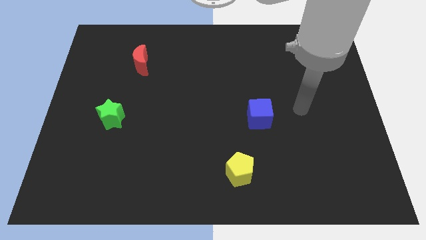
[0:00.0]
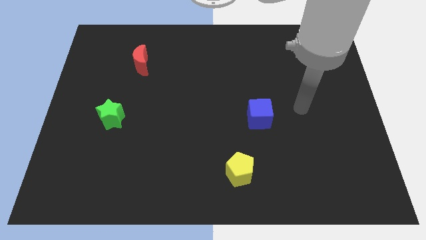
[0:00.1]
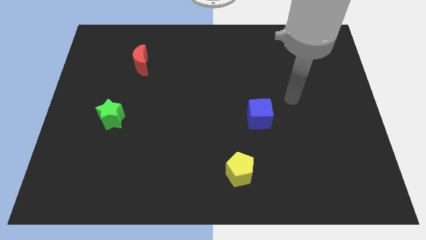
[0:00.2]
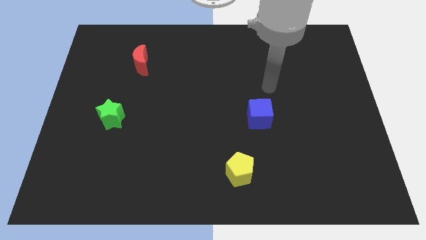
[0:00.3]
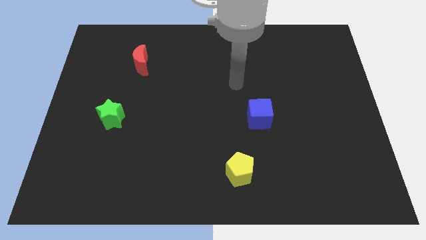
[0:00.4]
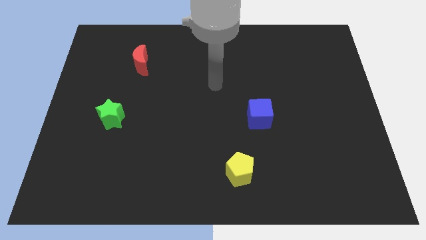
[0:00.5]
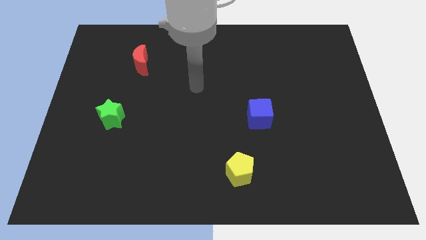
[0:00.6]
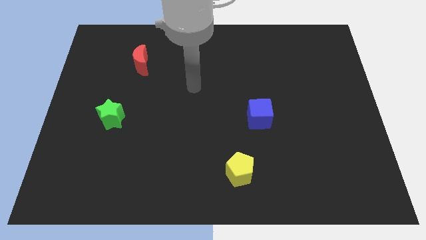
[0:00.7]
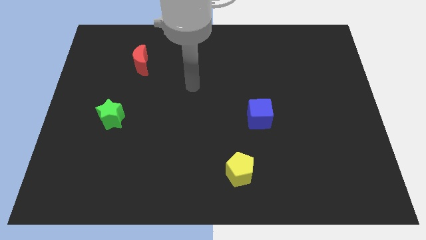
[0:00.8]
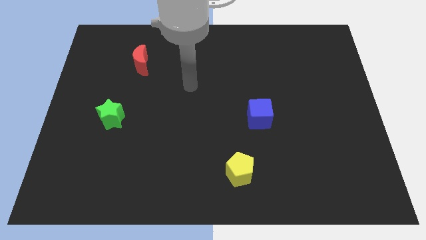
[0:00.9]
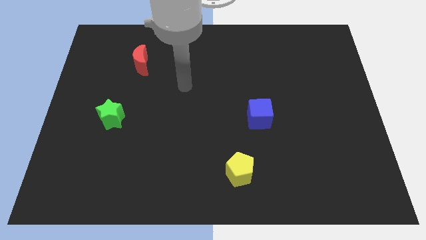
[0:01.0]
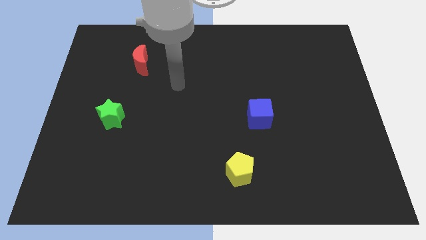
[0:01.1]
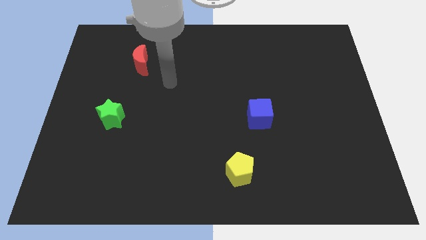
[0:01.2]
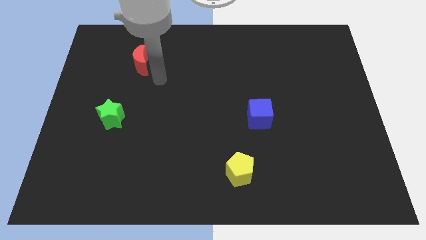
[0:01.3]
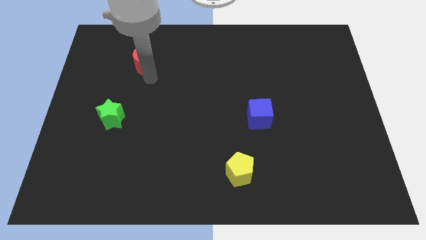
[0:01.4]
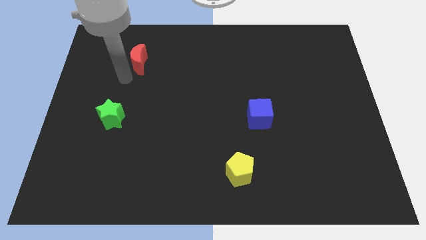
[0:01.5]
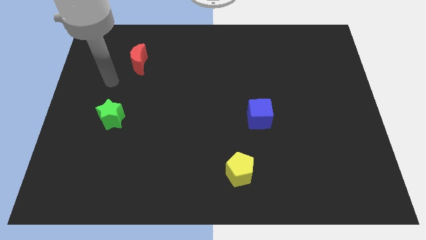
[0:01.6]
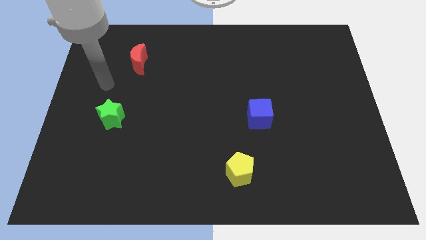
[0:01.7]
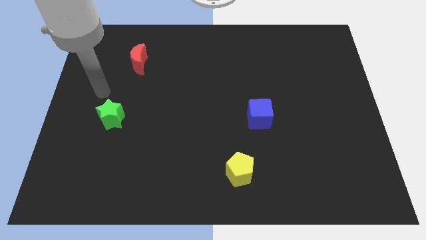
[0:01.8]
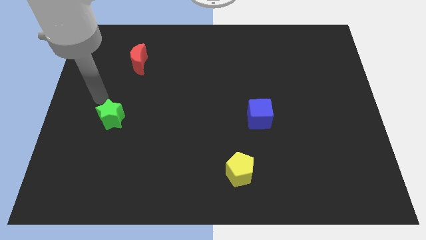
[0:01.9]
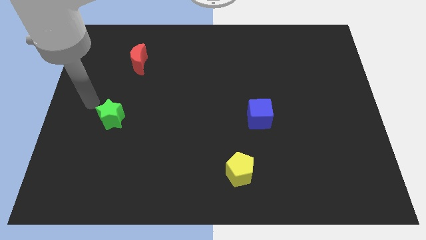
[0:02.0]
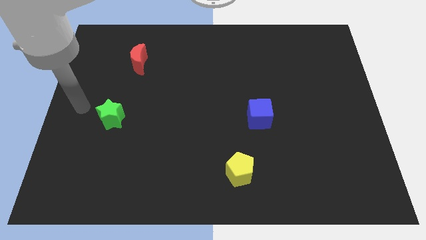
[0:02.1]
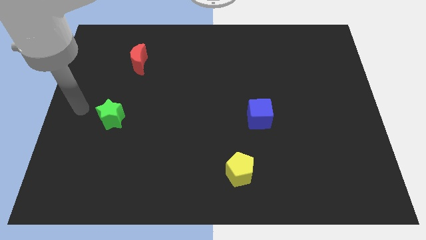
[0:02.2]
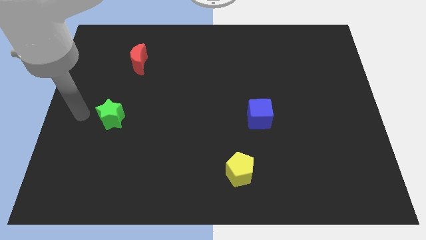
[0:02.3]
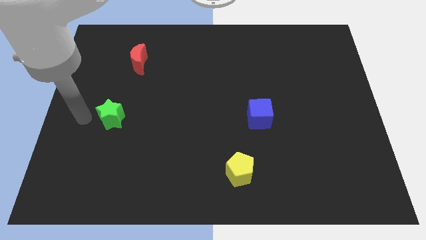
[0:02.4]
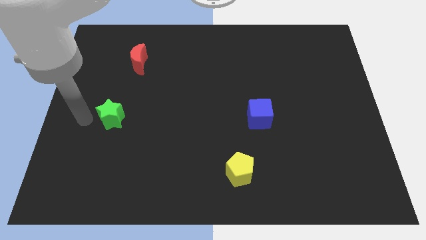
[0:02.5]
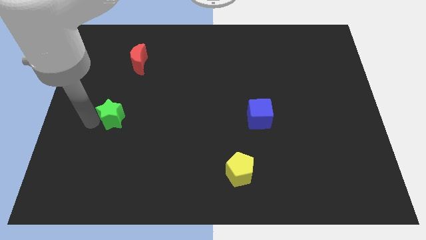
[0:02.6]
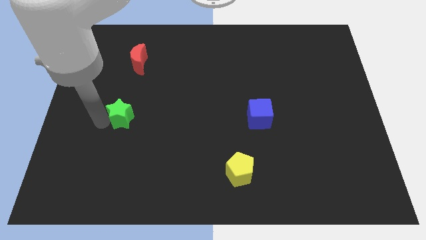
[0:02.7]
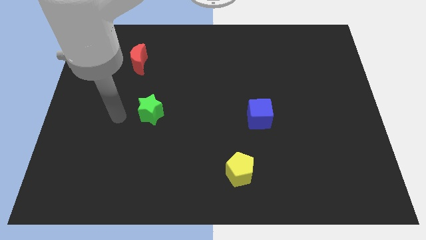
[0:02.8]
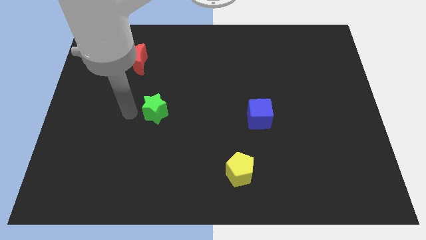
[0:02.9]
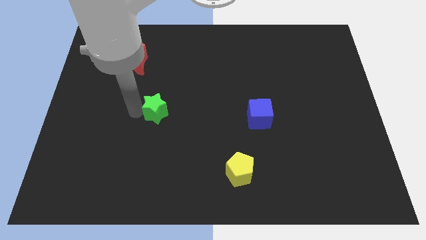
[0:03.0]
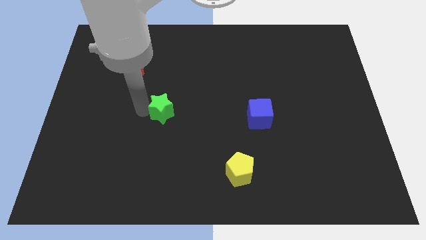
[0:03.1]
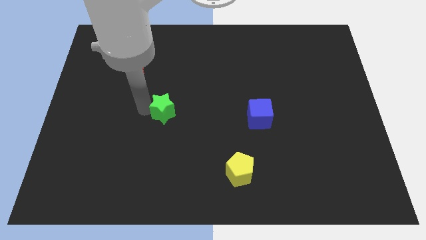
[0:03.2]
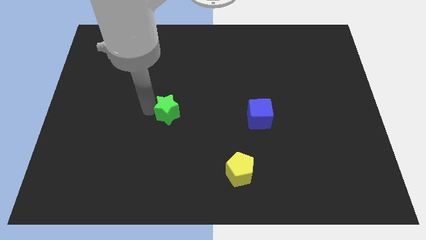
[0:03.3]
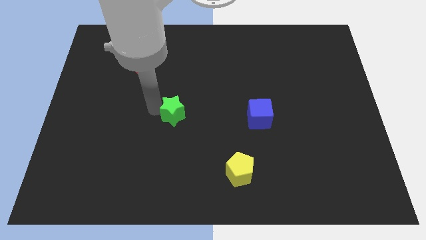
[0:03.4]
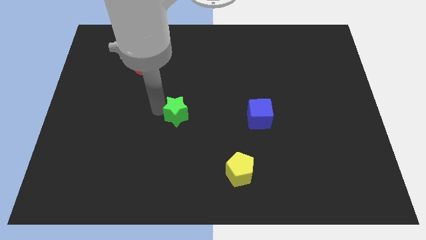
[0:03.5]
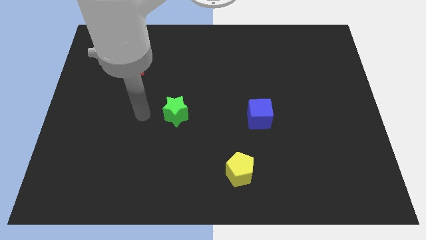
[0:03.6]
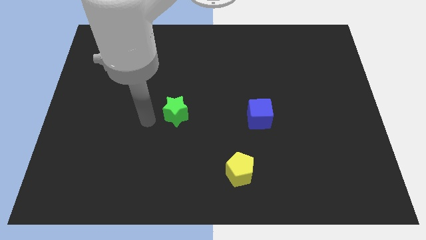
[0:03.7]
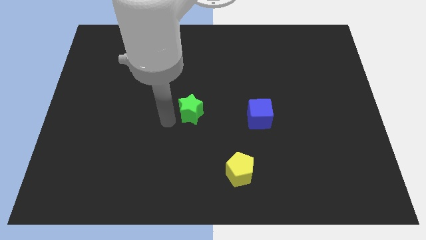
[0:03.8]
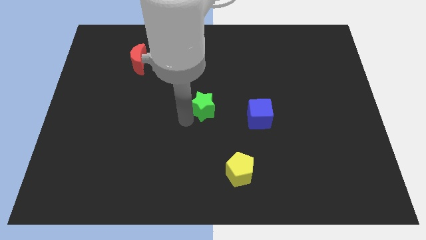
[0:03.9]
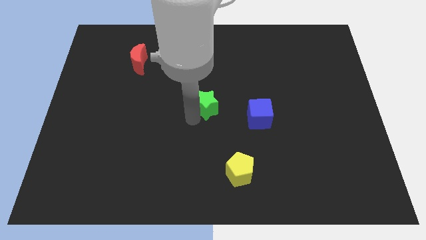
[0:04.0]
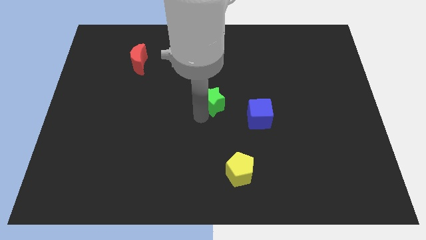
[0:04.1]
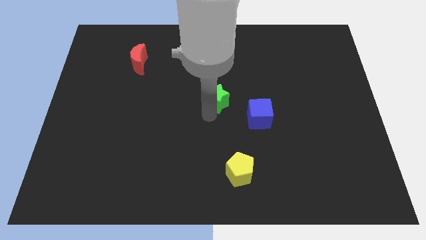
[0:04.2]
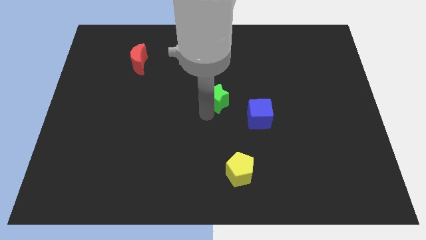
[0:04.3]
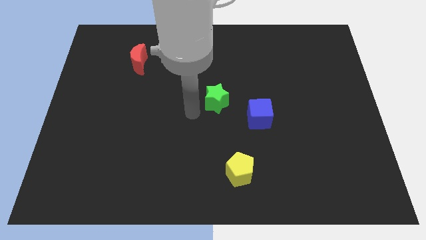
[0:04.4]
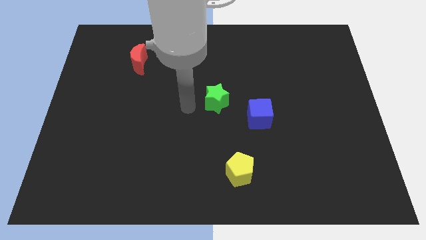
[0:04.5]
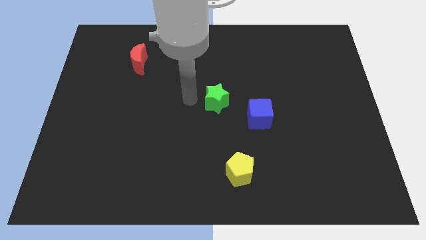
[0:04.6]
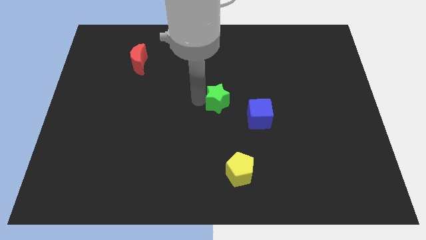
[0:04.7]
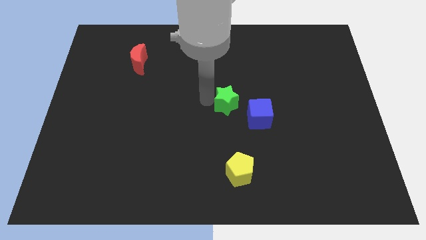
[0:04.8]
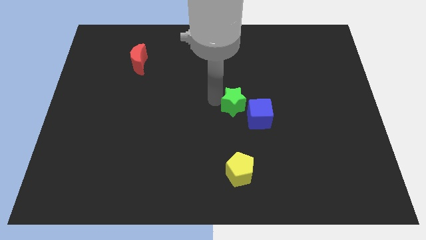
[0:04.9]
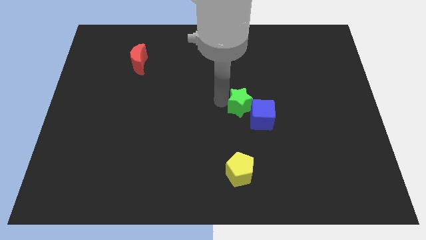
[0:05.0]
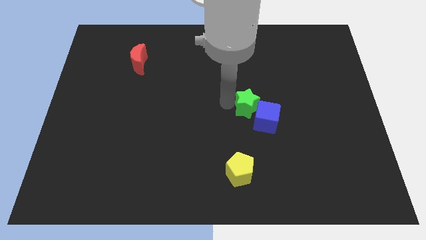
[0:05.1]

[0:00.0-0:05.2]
move the star to the blue cube

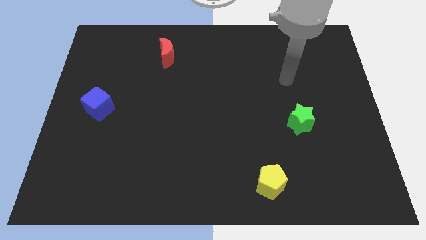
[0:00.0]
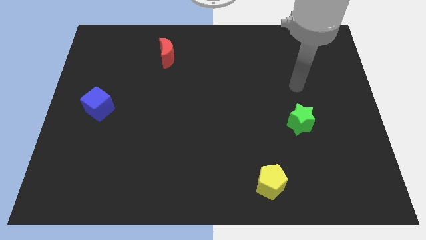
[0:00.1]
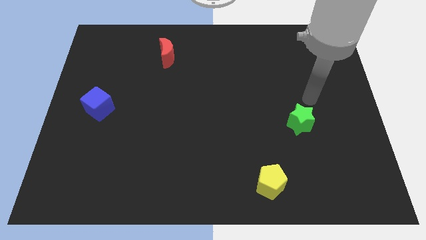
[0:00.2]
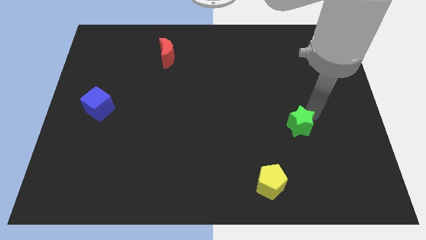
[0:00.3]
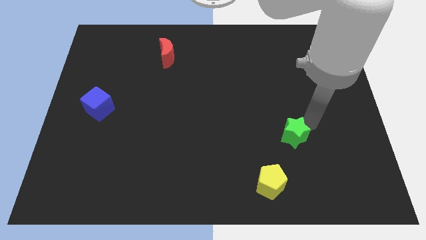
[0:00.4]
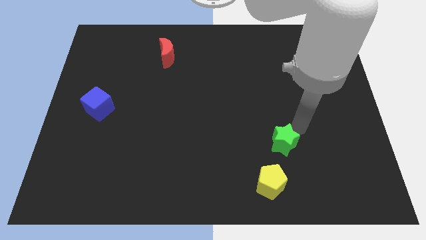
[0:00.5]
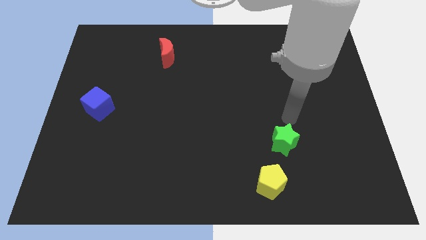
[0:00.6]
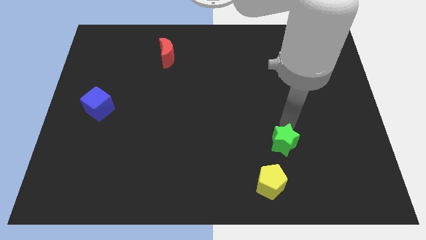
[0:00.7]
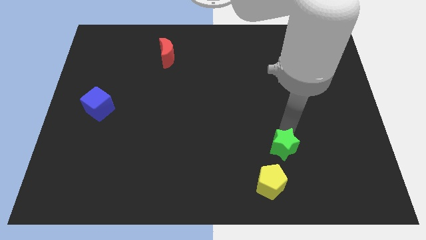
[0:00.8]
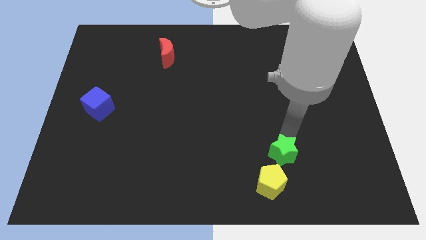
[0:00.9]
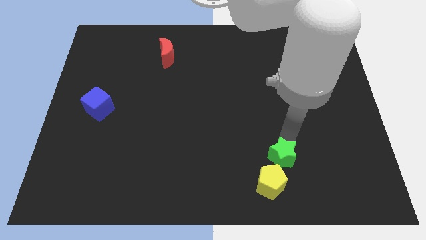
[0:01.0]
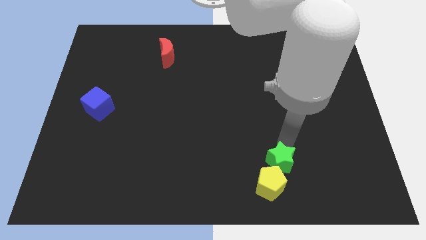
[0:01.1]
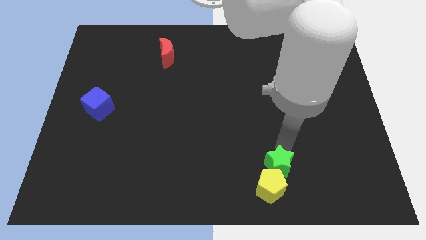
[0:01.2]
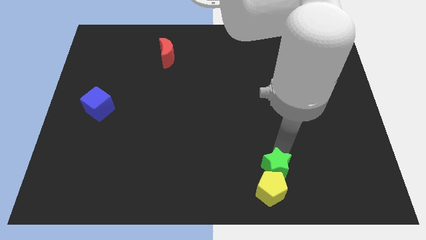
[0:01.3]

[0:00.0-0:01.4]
move the star next to the pentagon

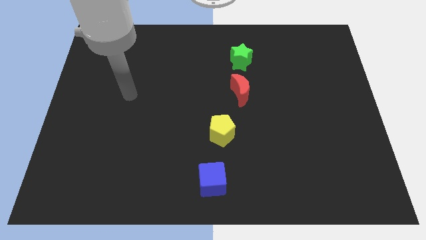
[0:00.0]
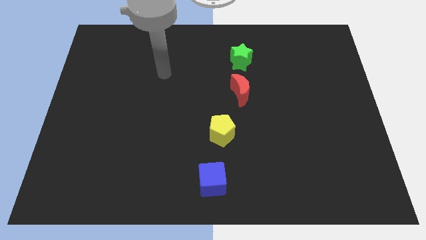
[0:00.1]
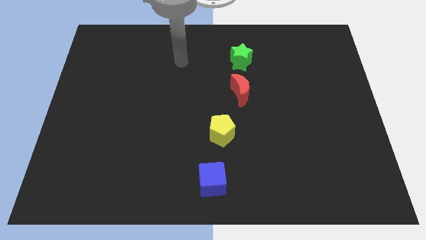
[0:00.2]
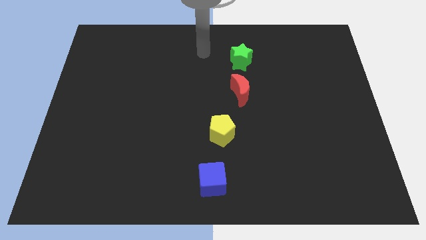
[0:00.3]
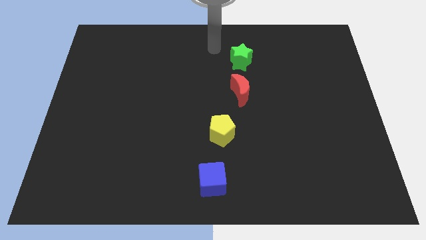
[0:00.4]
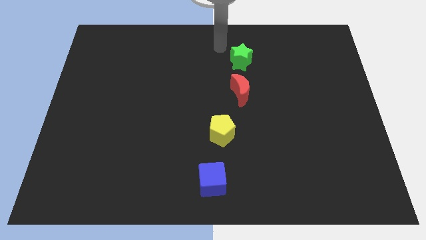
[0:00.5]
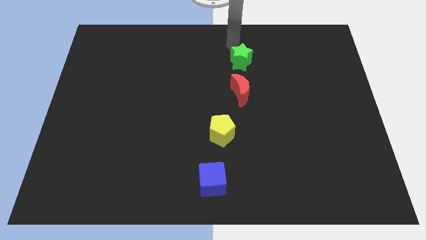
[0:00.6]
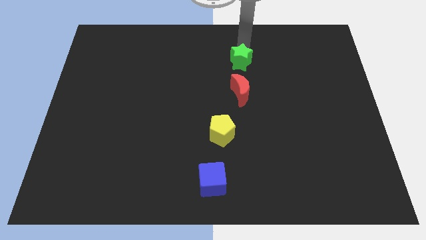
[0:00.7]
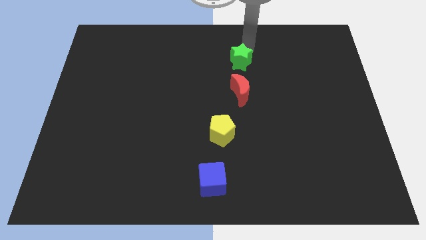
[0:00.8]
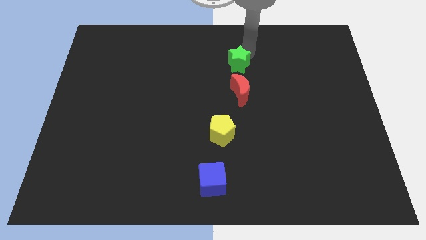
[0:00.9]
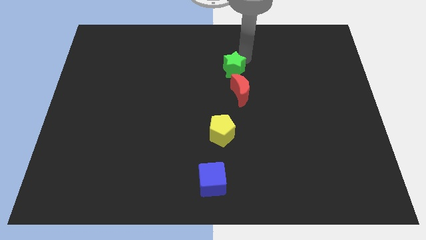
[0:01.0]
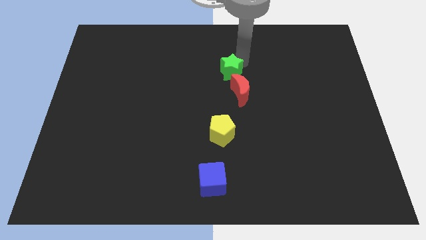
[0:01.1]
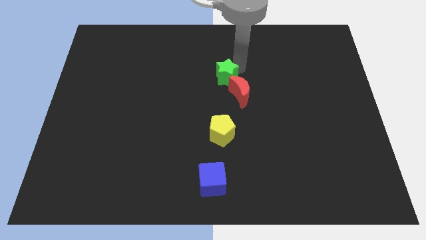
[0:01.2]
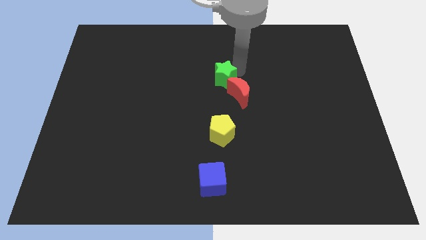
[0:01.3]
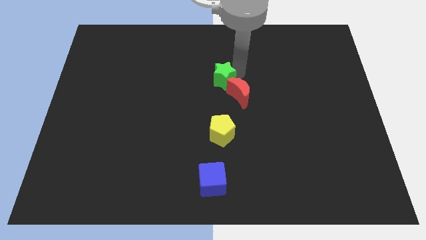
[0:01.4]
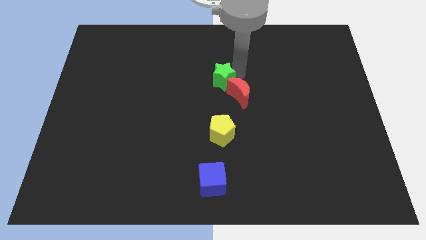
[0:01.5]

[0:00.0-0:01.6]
slide the green block towards the red block

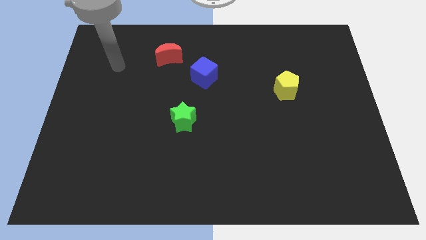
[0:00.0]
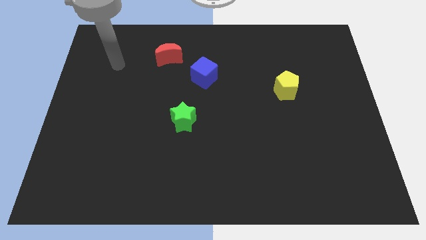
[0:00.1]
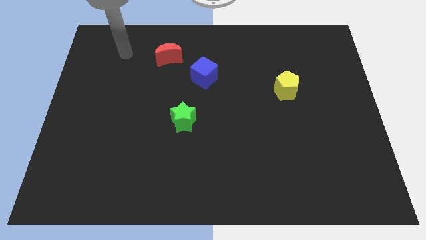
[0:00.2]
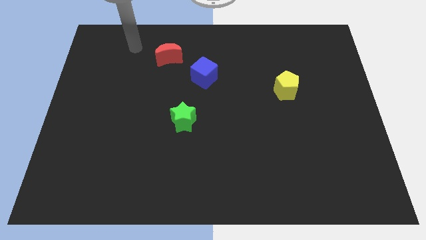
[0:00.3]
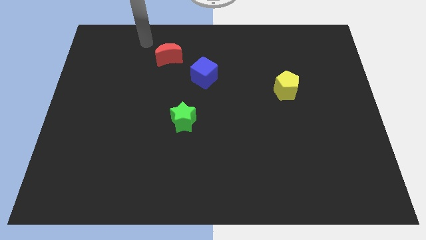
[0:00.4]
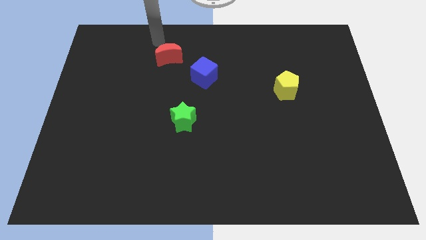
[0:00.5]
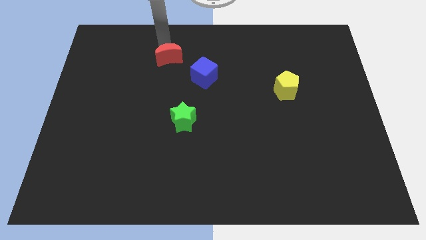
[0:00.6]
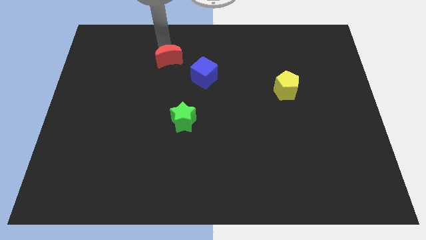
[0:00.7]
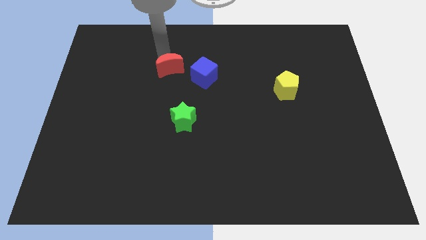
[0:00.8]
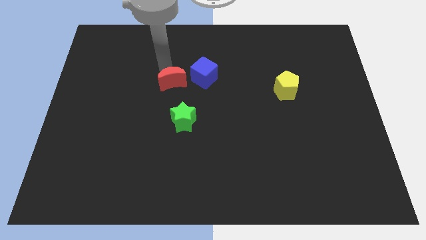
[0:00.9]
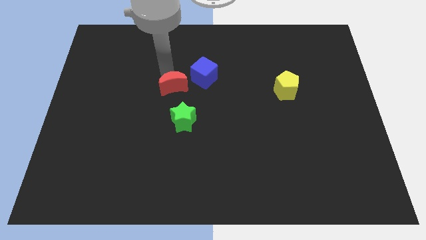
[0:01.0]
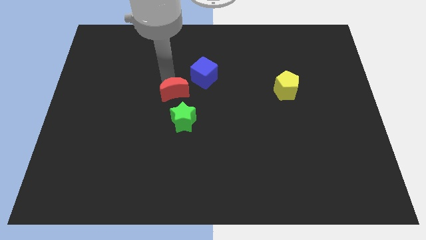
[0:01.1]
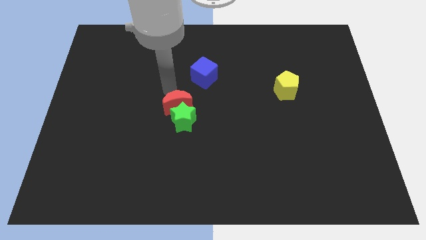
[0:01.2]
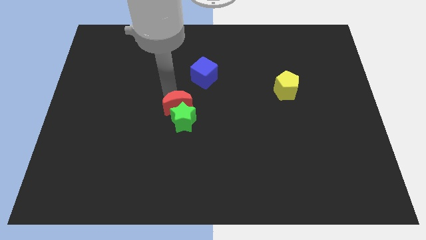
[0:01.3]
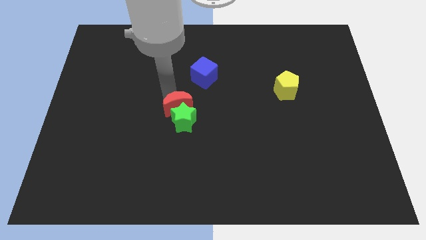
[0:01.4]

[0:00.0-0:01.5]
push the red moon close to the green star
